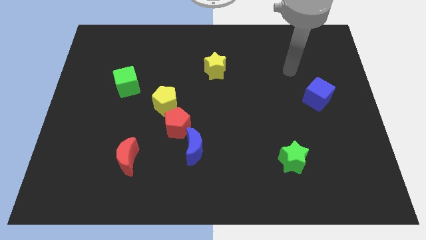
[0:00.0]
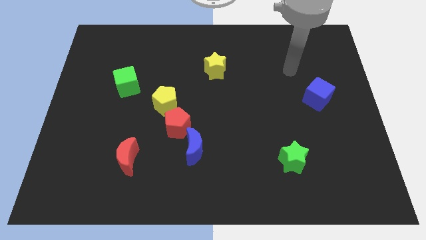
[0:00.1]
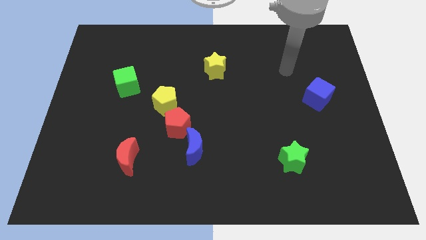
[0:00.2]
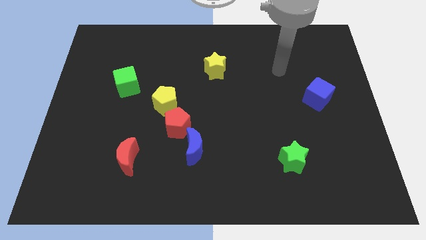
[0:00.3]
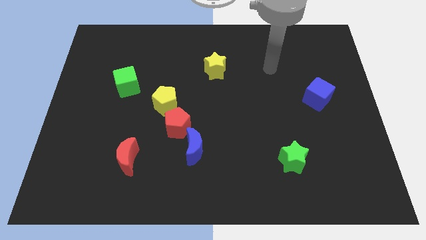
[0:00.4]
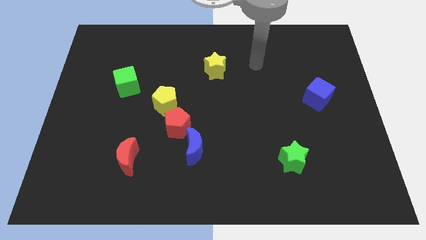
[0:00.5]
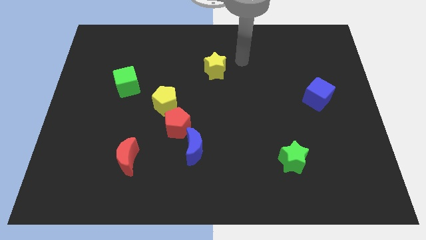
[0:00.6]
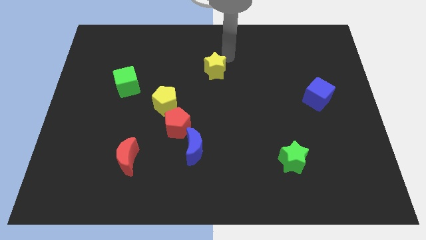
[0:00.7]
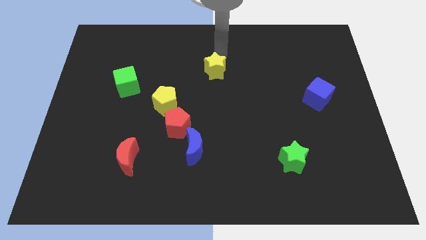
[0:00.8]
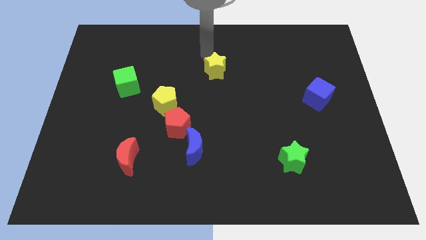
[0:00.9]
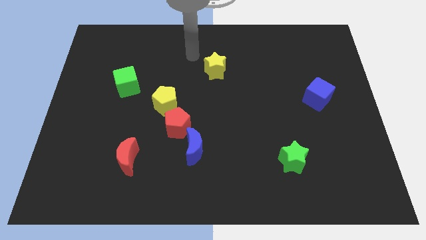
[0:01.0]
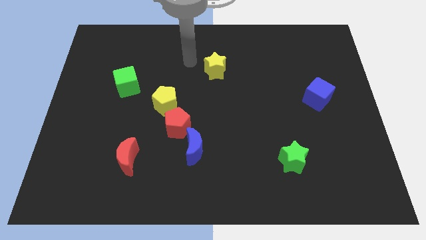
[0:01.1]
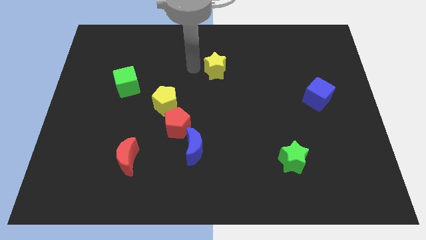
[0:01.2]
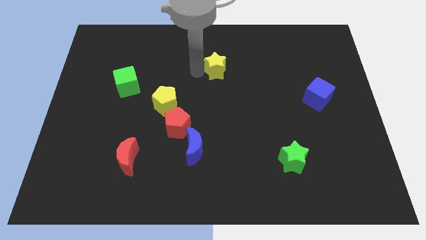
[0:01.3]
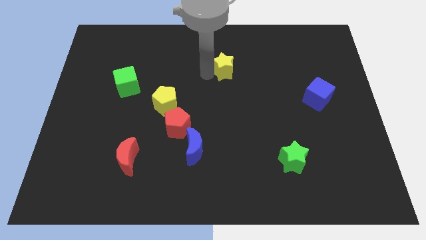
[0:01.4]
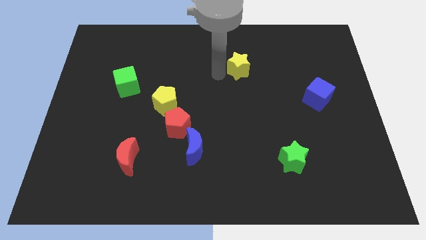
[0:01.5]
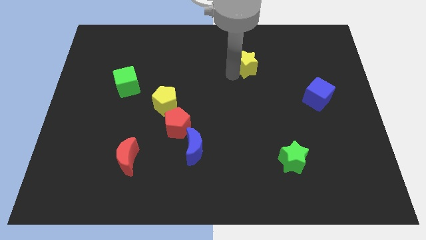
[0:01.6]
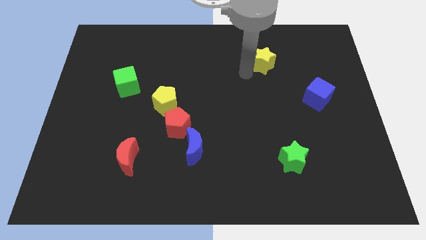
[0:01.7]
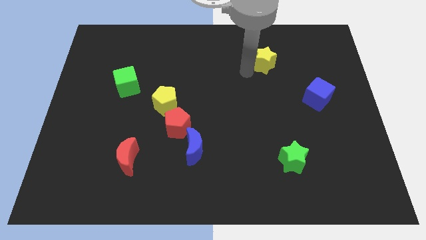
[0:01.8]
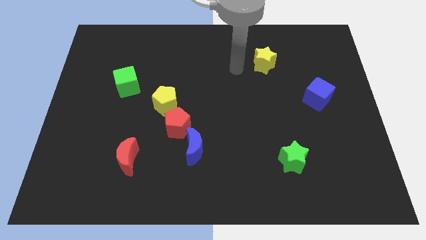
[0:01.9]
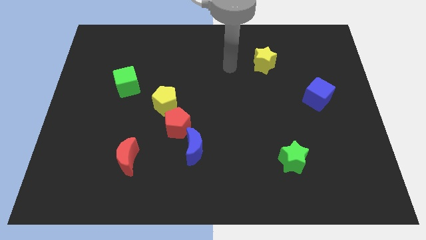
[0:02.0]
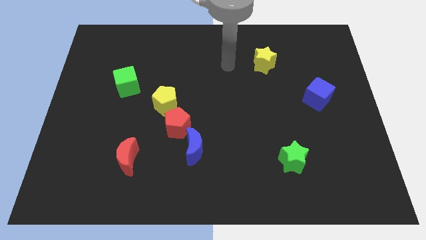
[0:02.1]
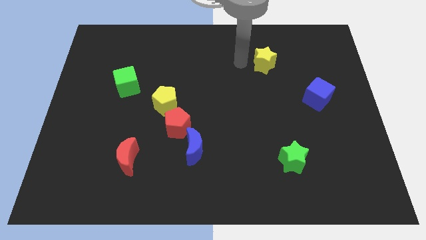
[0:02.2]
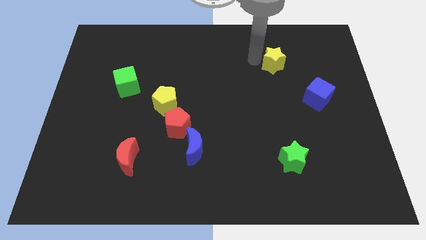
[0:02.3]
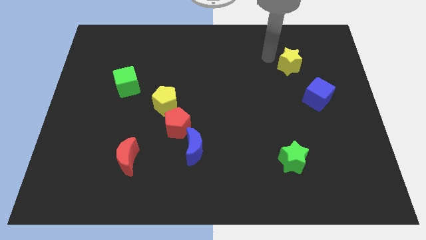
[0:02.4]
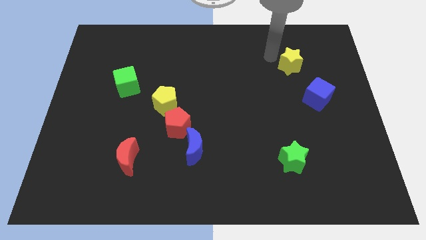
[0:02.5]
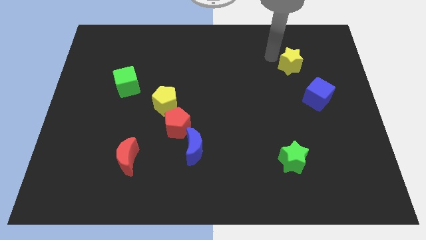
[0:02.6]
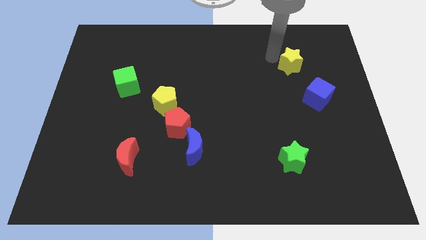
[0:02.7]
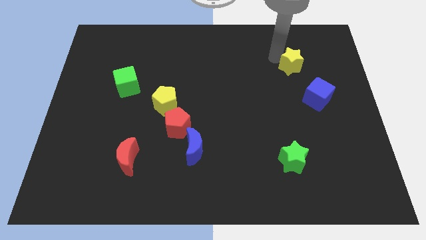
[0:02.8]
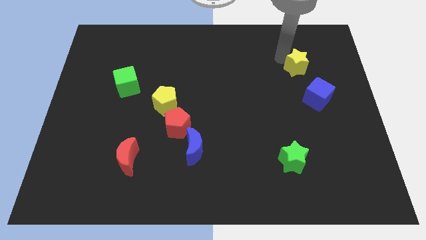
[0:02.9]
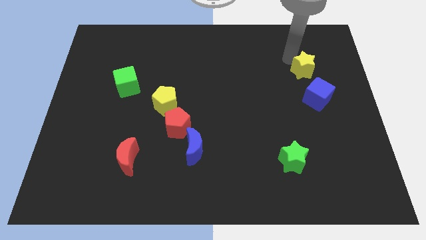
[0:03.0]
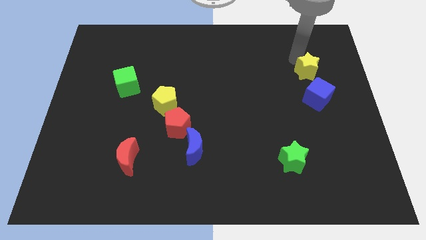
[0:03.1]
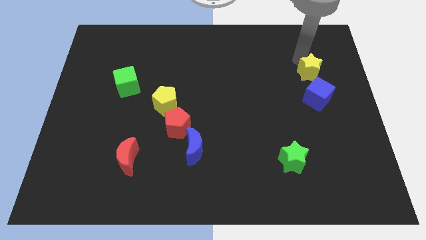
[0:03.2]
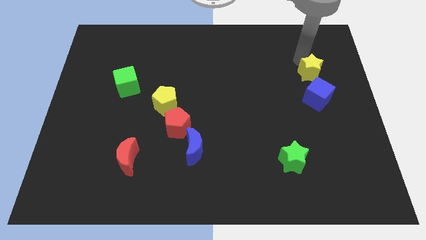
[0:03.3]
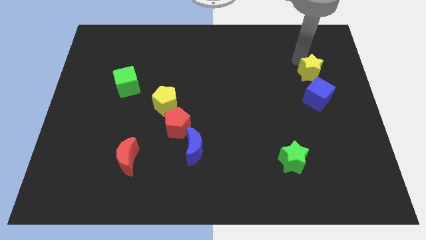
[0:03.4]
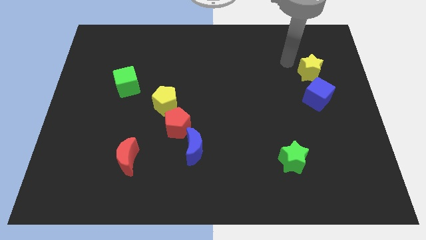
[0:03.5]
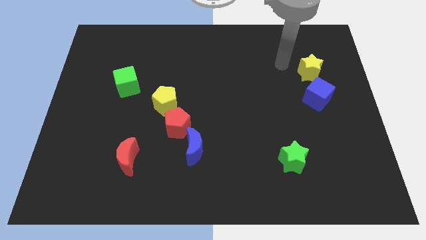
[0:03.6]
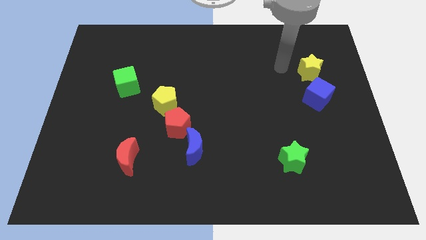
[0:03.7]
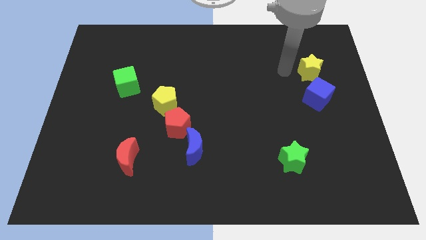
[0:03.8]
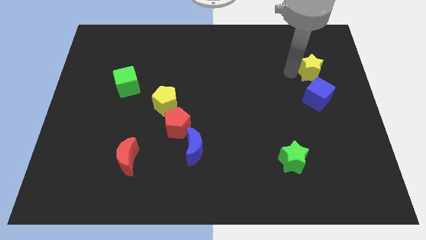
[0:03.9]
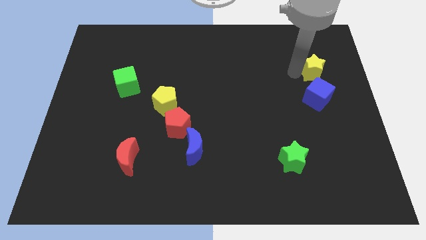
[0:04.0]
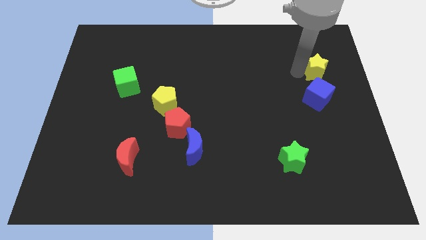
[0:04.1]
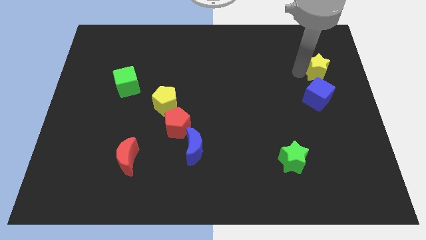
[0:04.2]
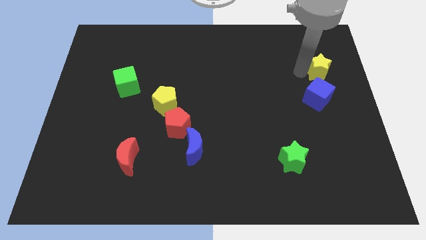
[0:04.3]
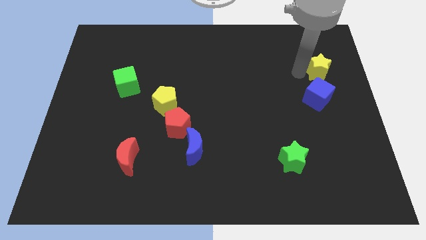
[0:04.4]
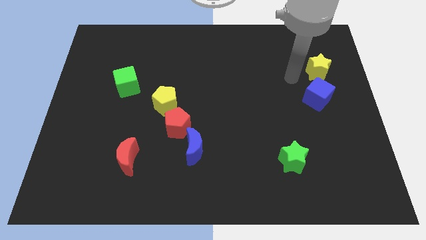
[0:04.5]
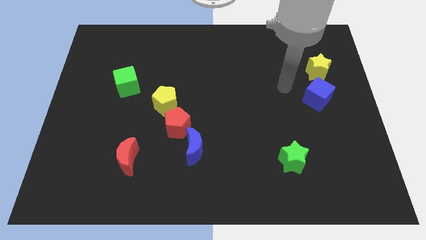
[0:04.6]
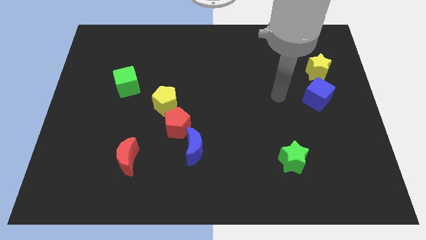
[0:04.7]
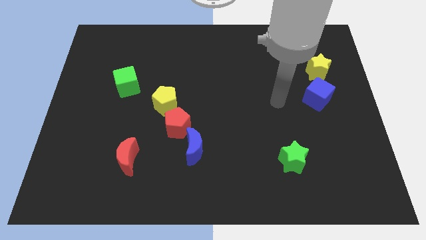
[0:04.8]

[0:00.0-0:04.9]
place the yellow star on top of the blue cube

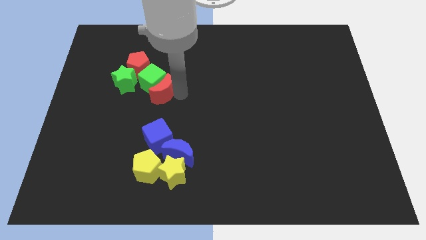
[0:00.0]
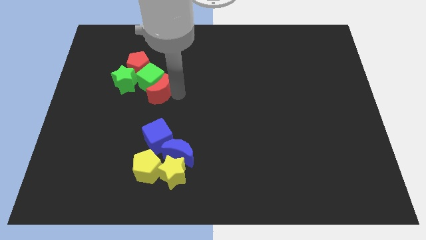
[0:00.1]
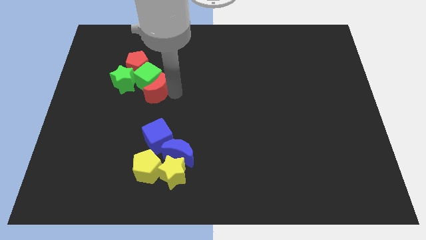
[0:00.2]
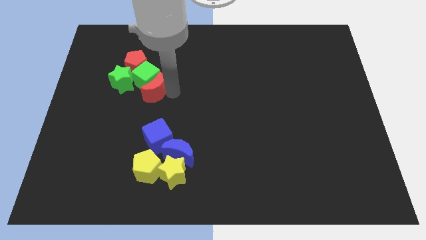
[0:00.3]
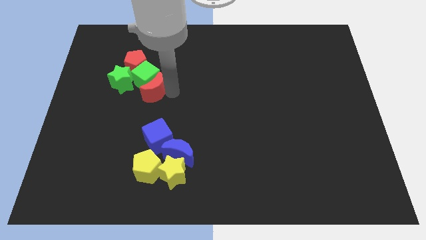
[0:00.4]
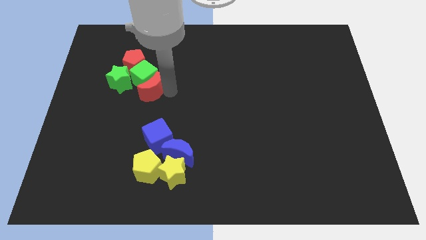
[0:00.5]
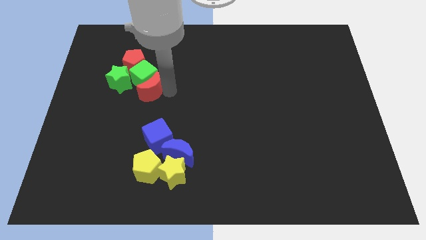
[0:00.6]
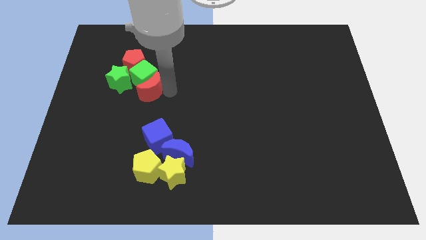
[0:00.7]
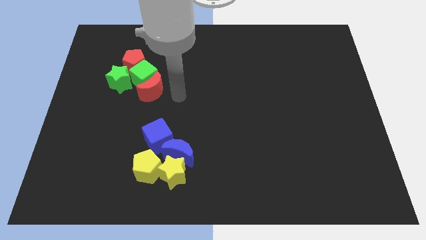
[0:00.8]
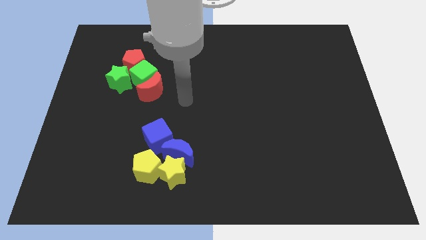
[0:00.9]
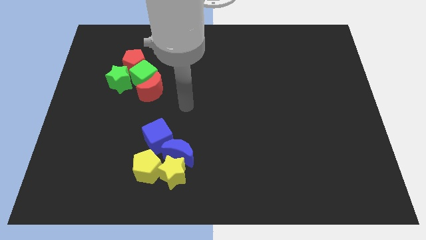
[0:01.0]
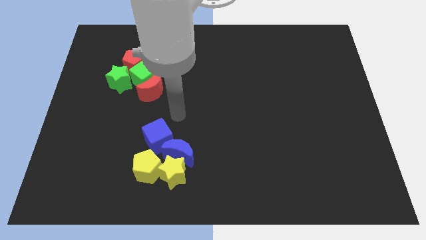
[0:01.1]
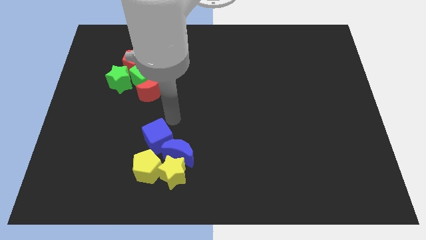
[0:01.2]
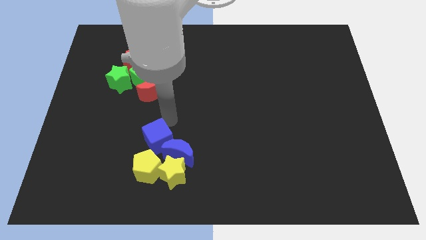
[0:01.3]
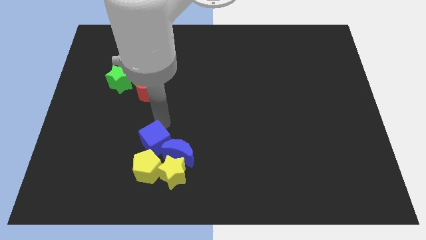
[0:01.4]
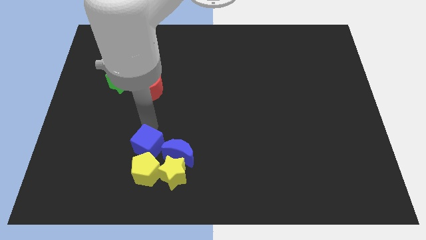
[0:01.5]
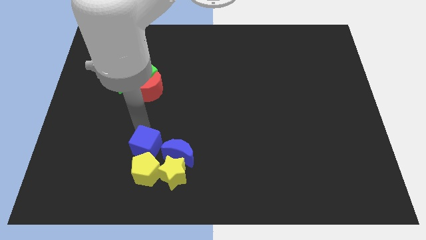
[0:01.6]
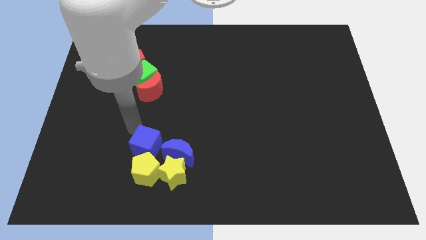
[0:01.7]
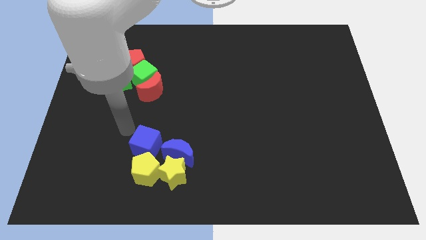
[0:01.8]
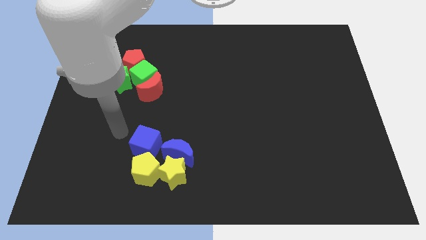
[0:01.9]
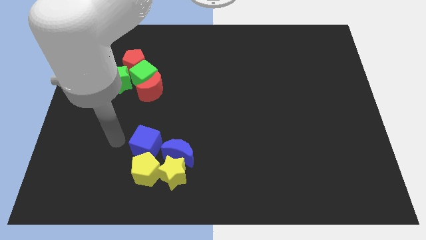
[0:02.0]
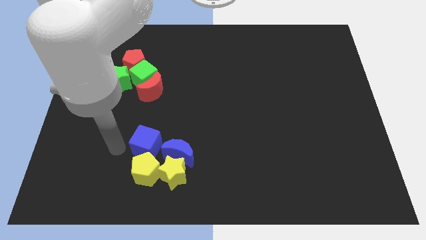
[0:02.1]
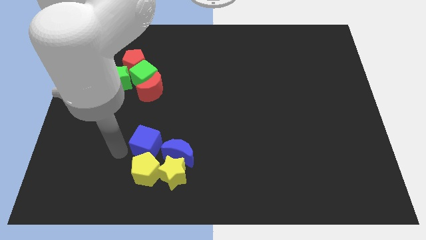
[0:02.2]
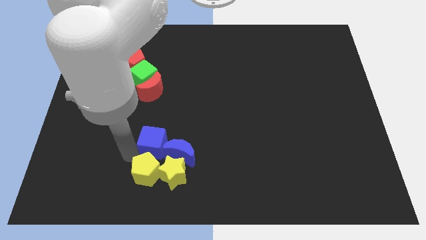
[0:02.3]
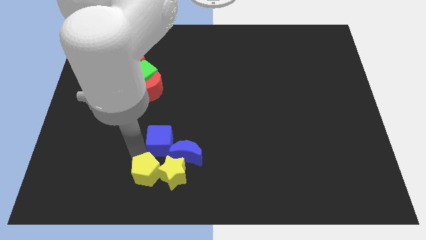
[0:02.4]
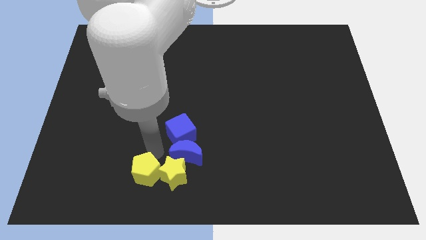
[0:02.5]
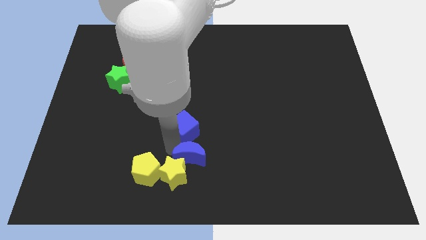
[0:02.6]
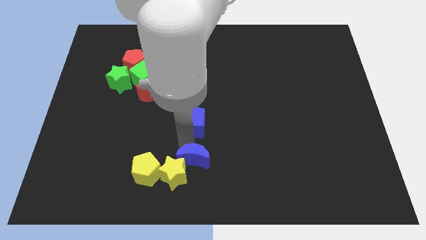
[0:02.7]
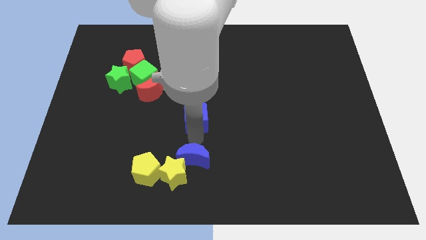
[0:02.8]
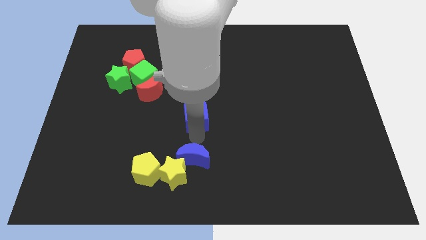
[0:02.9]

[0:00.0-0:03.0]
push blue cube above blue crescent

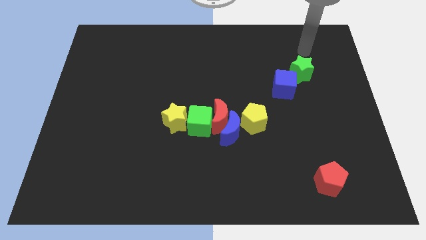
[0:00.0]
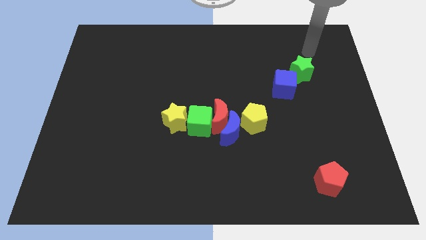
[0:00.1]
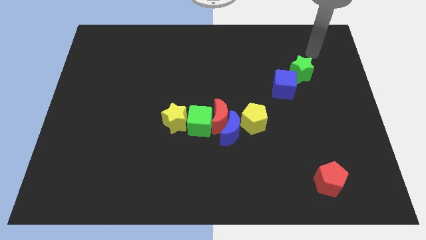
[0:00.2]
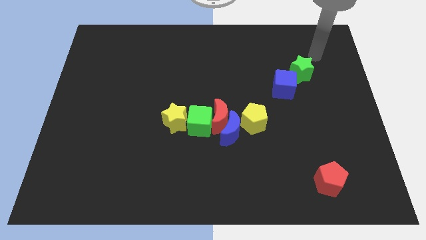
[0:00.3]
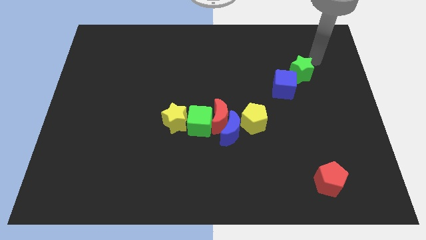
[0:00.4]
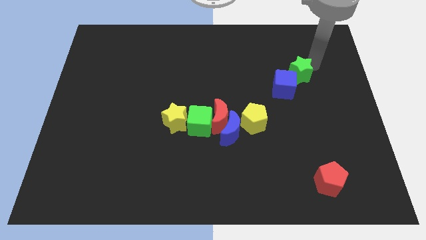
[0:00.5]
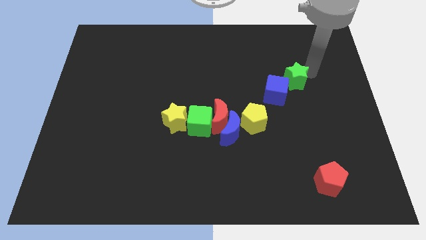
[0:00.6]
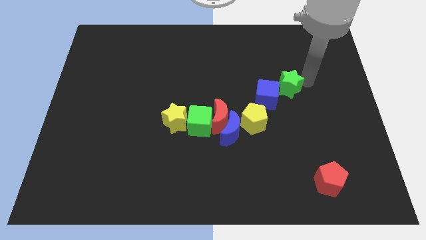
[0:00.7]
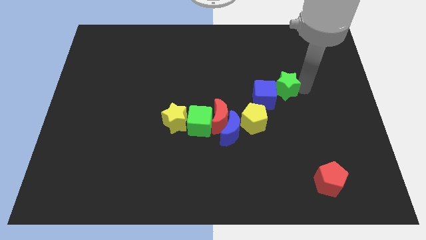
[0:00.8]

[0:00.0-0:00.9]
push the blue cube and green star towards the group of blocks

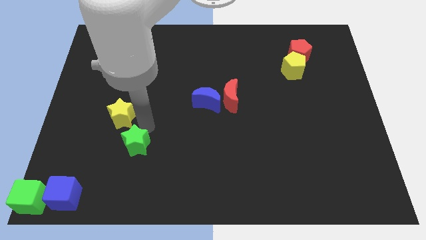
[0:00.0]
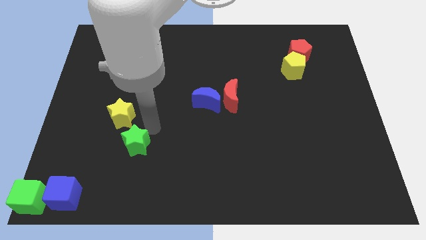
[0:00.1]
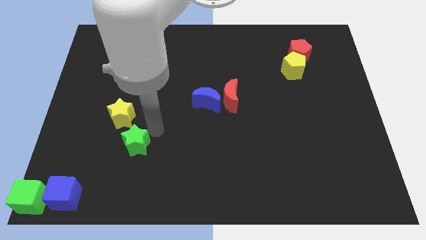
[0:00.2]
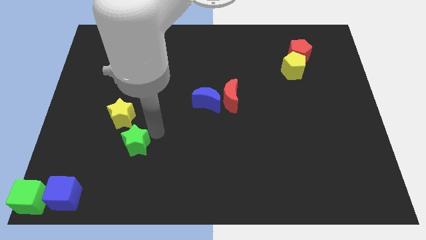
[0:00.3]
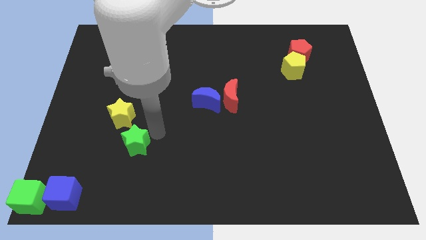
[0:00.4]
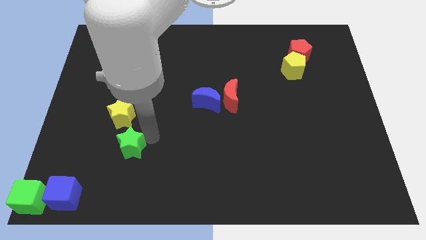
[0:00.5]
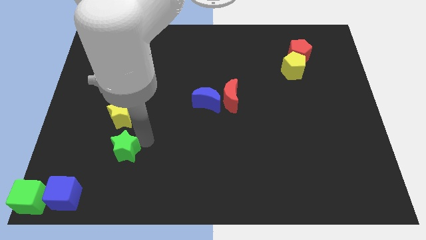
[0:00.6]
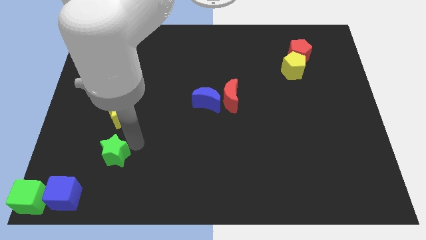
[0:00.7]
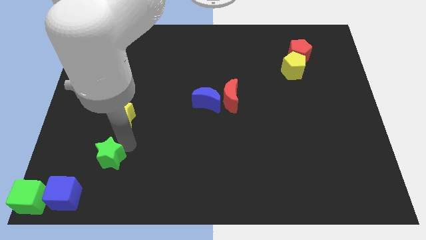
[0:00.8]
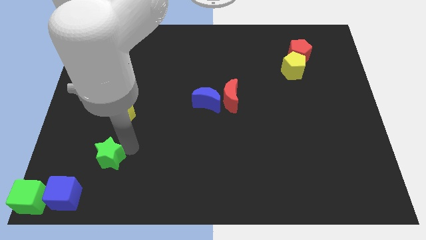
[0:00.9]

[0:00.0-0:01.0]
place the green star below the yellow star
